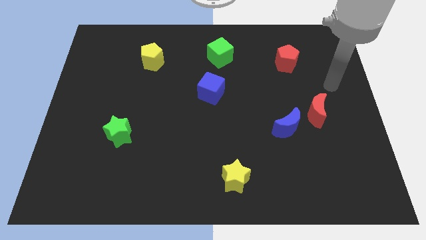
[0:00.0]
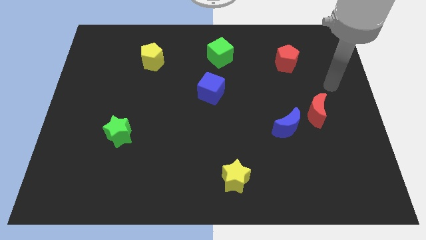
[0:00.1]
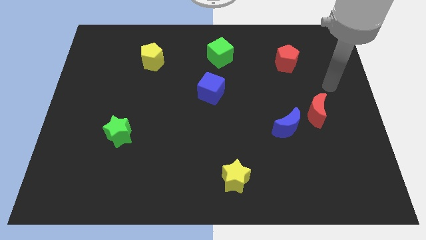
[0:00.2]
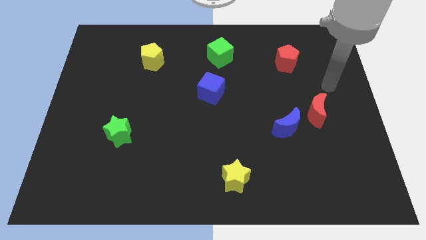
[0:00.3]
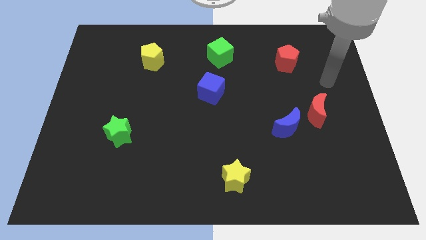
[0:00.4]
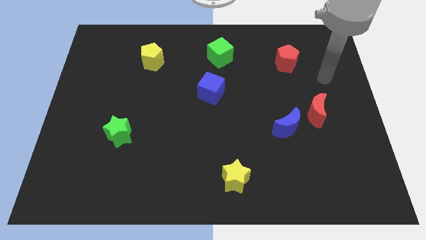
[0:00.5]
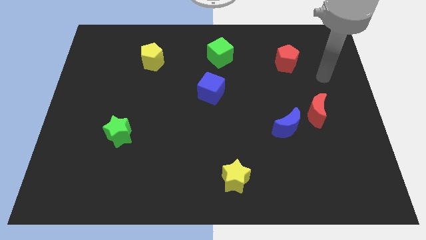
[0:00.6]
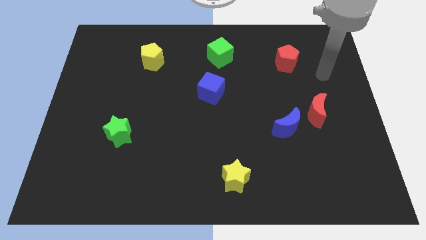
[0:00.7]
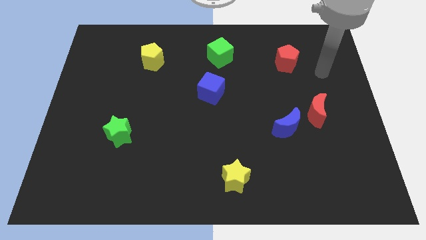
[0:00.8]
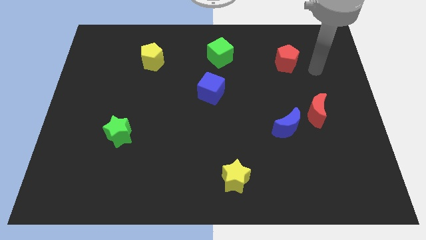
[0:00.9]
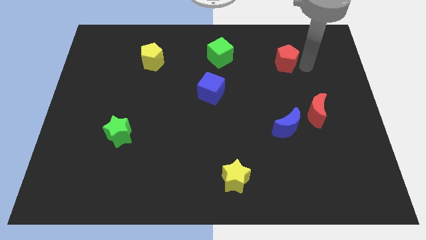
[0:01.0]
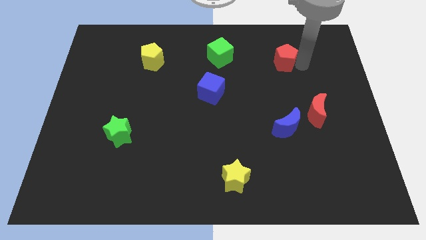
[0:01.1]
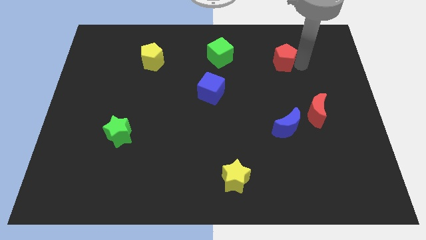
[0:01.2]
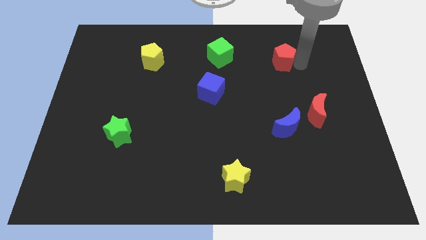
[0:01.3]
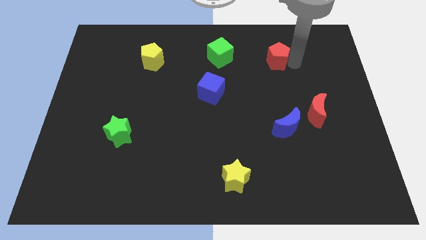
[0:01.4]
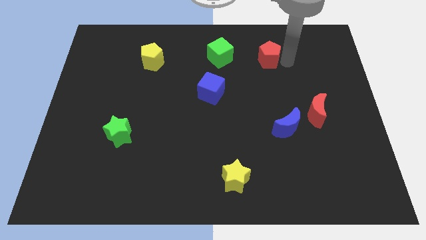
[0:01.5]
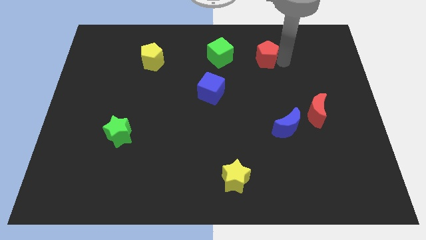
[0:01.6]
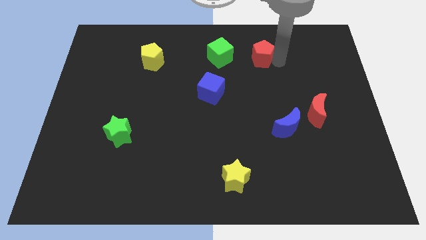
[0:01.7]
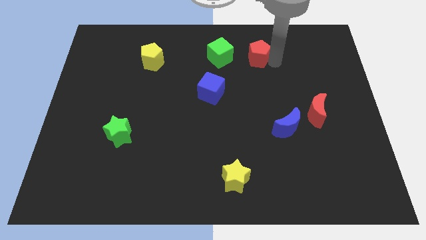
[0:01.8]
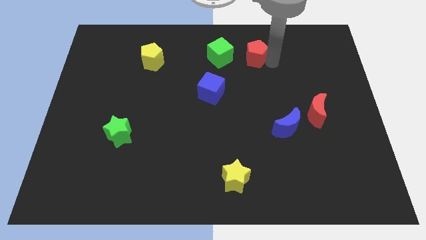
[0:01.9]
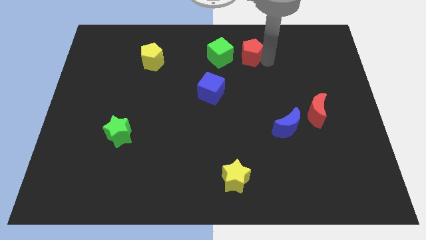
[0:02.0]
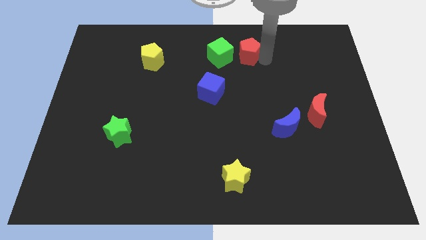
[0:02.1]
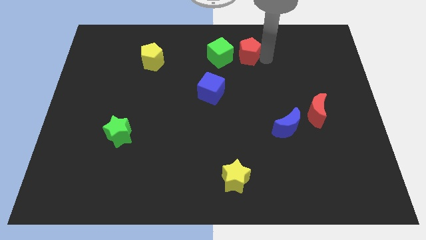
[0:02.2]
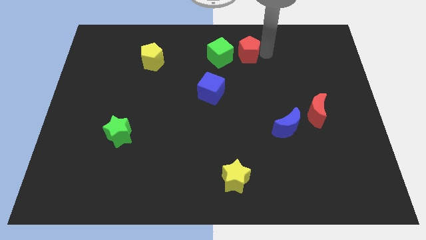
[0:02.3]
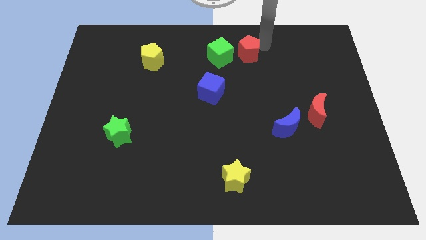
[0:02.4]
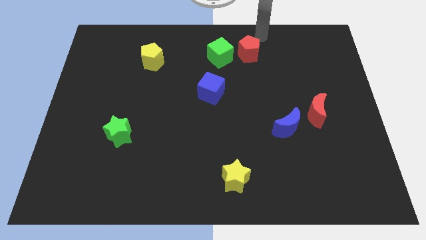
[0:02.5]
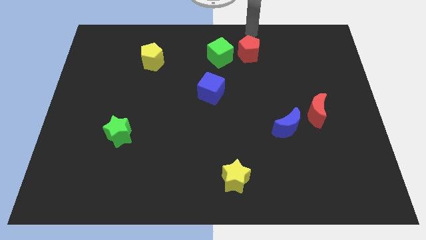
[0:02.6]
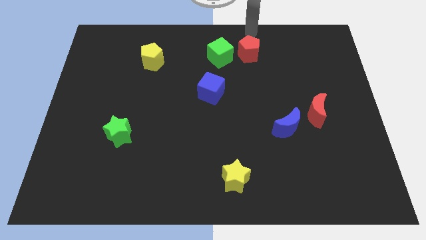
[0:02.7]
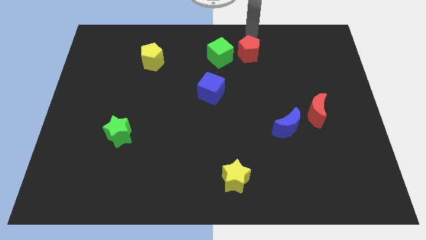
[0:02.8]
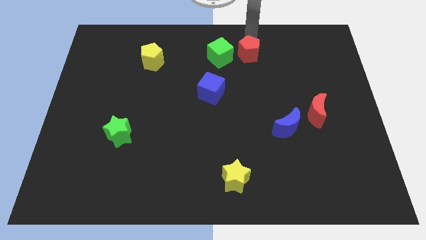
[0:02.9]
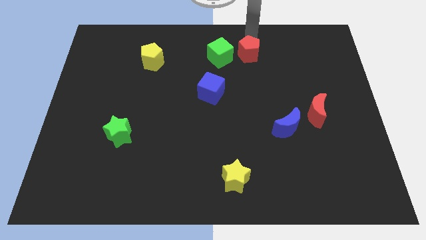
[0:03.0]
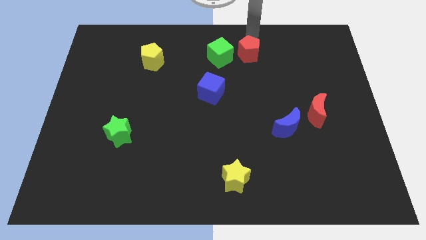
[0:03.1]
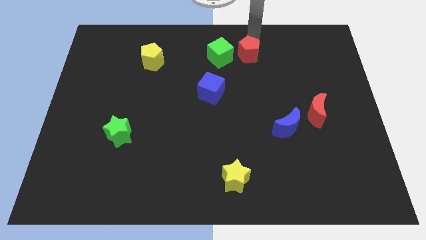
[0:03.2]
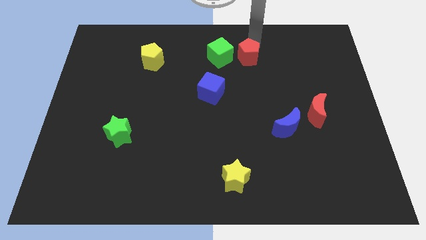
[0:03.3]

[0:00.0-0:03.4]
move the red pentagon to the right side of the green cube

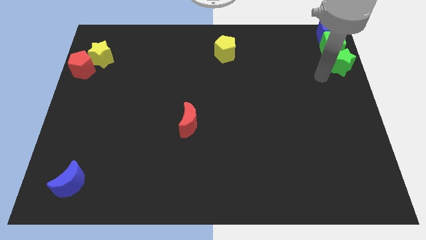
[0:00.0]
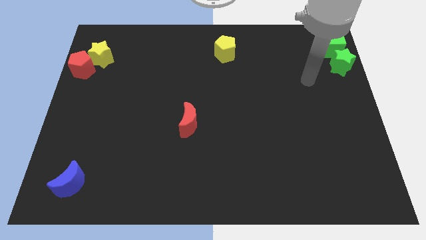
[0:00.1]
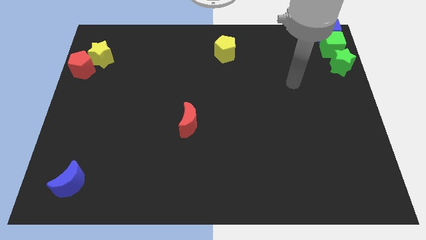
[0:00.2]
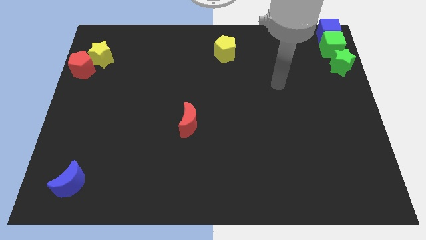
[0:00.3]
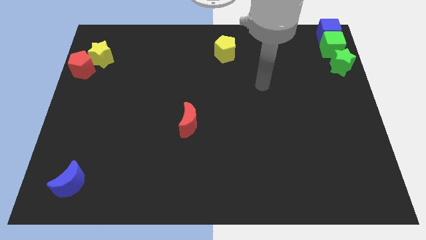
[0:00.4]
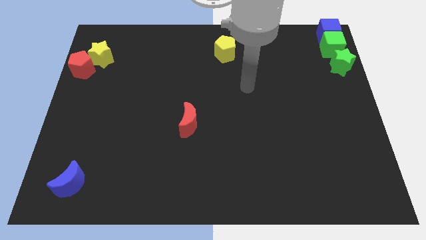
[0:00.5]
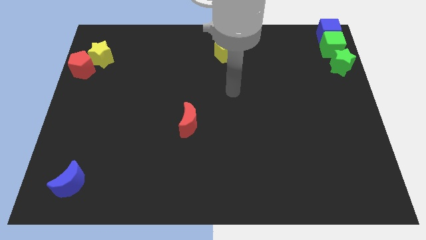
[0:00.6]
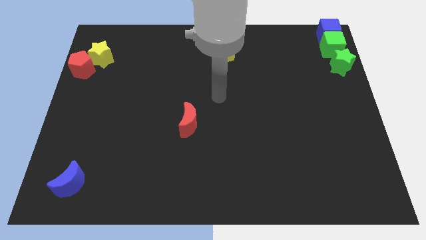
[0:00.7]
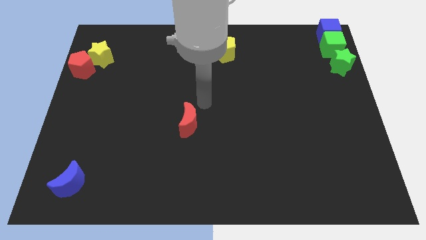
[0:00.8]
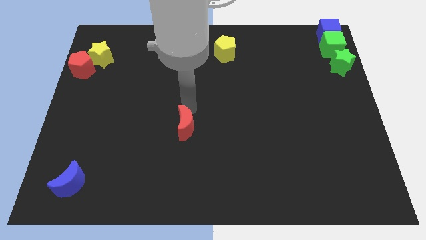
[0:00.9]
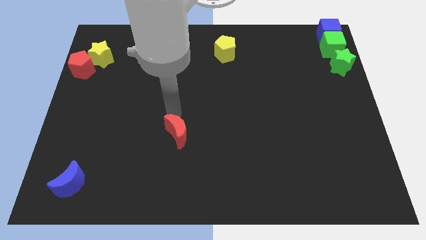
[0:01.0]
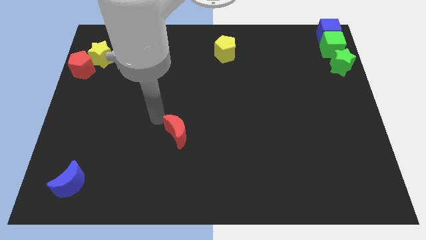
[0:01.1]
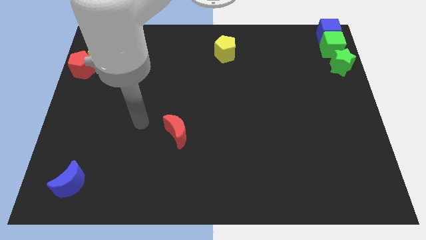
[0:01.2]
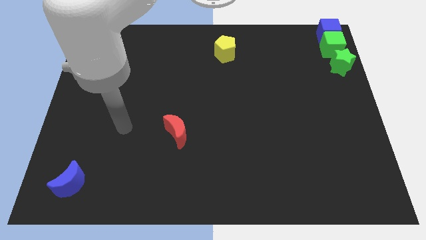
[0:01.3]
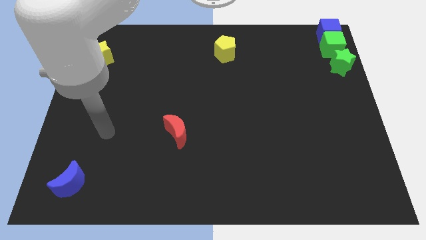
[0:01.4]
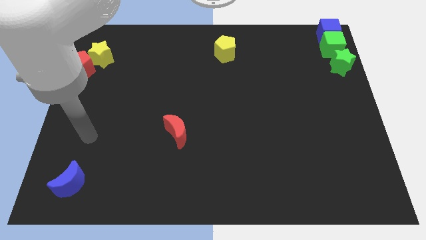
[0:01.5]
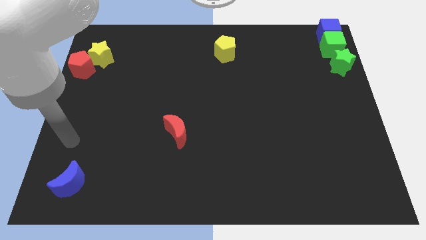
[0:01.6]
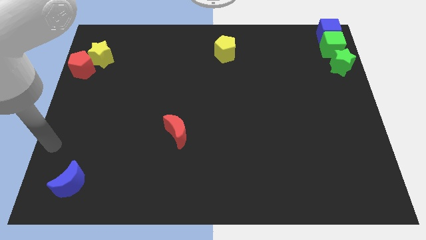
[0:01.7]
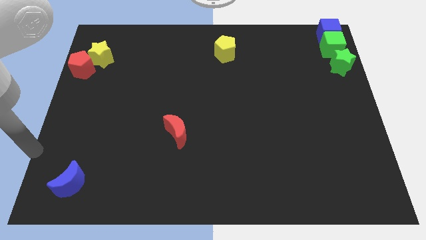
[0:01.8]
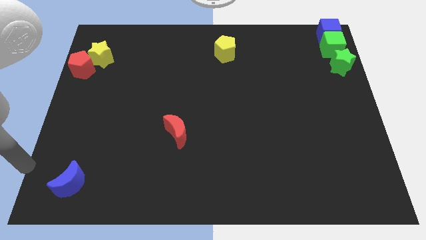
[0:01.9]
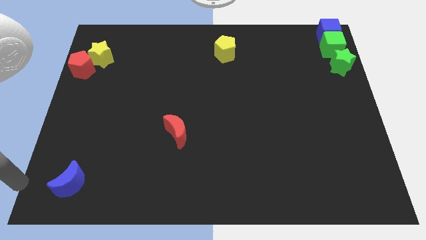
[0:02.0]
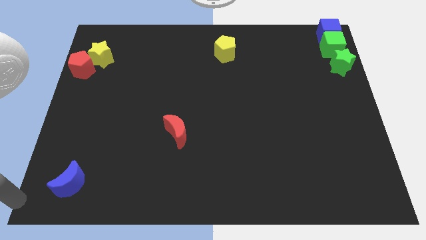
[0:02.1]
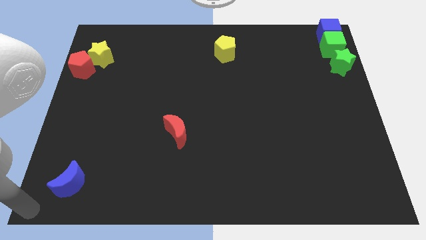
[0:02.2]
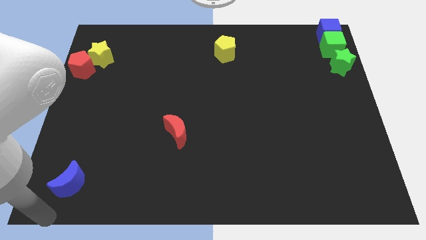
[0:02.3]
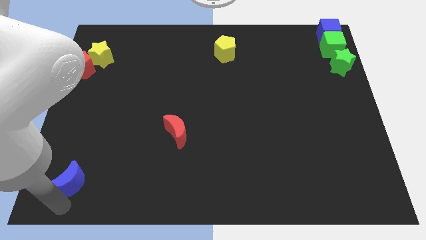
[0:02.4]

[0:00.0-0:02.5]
move your arm towards the blue moon

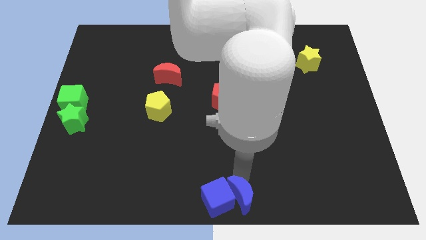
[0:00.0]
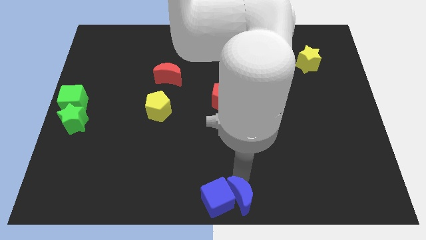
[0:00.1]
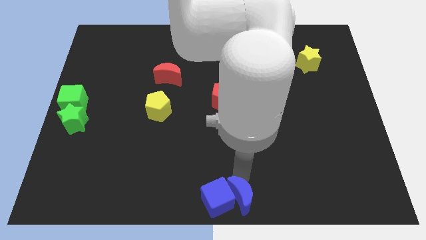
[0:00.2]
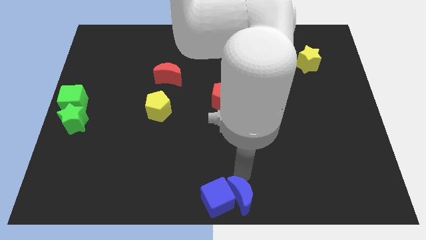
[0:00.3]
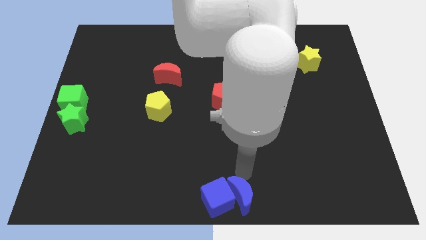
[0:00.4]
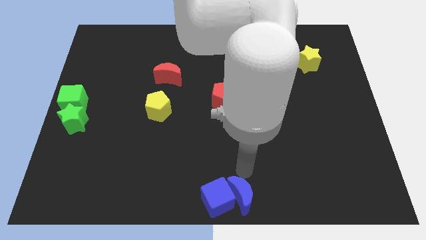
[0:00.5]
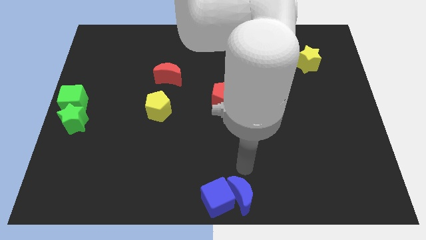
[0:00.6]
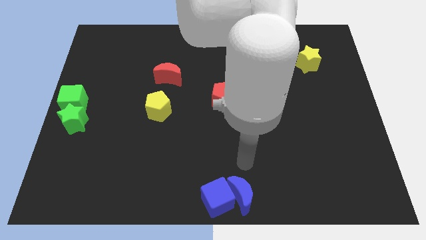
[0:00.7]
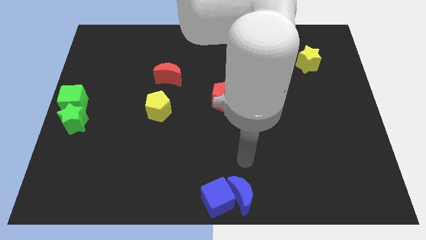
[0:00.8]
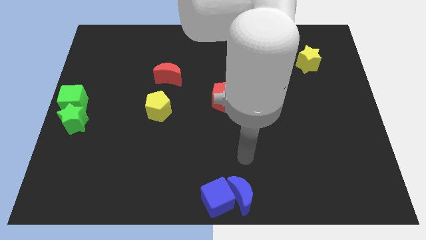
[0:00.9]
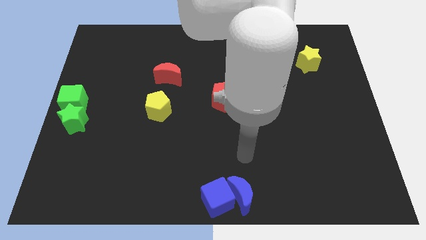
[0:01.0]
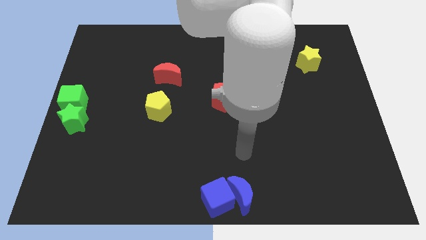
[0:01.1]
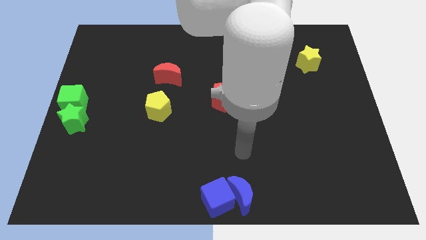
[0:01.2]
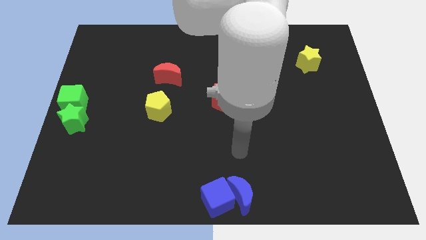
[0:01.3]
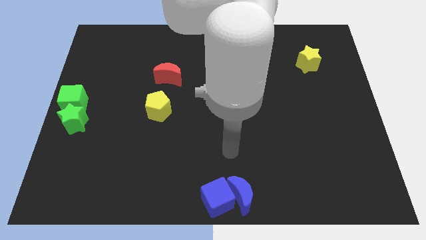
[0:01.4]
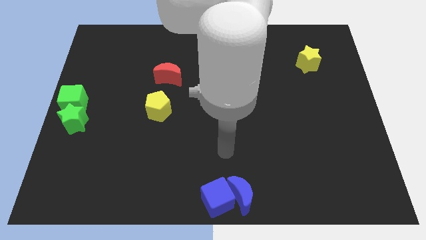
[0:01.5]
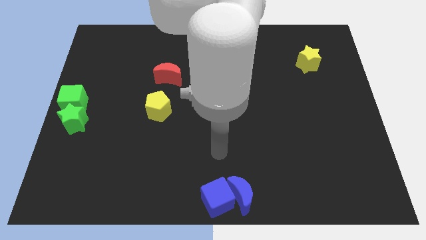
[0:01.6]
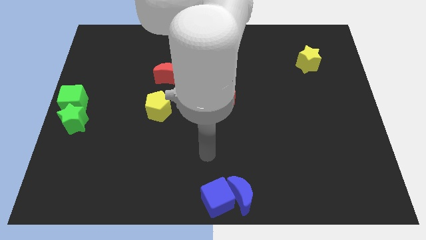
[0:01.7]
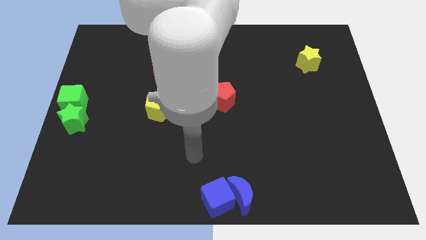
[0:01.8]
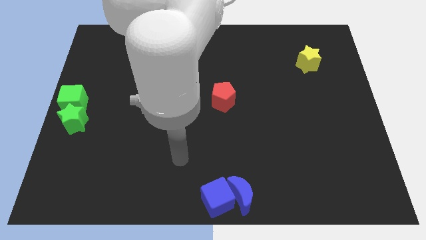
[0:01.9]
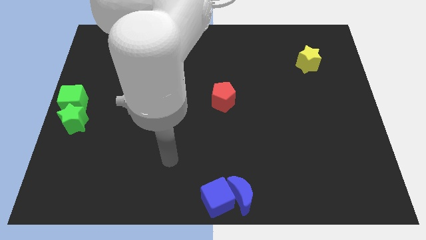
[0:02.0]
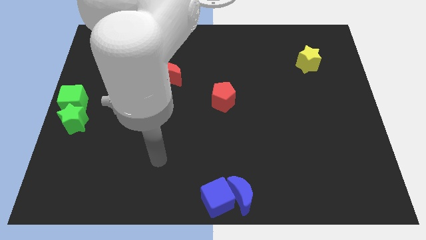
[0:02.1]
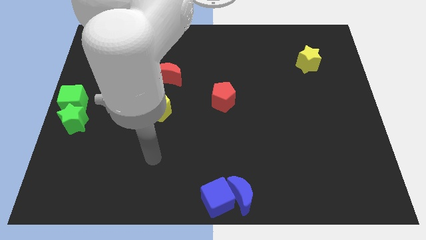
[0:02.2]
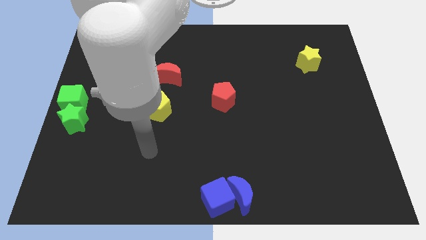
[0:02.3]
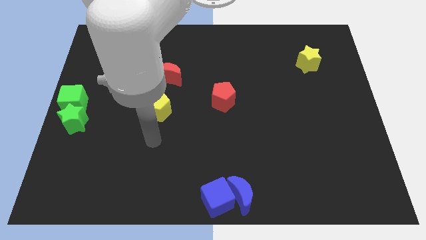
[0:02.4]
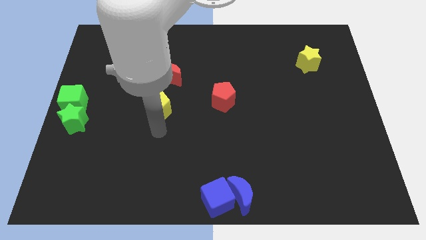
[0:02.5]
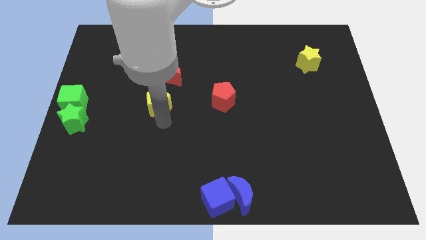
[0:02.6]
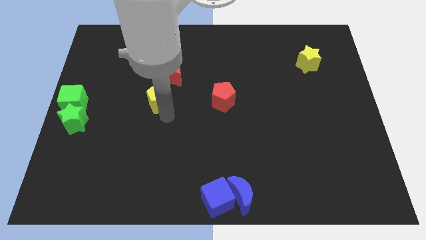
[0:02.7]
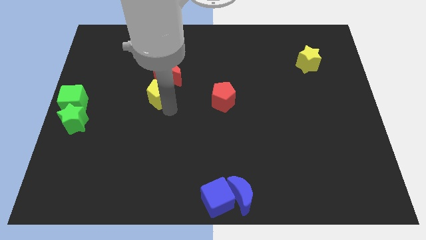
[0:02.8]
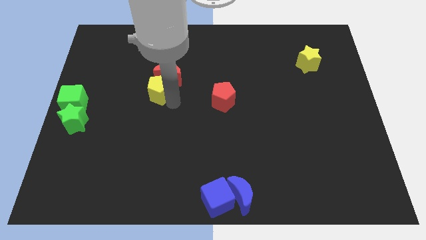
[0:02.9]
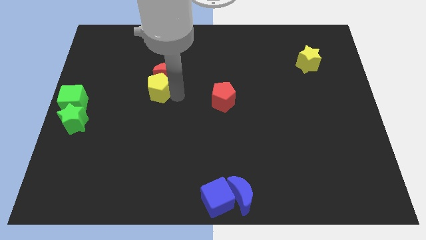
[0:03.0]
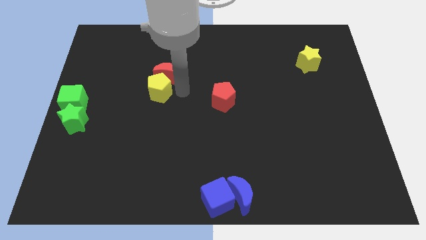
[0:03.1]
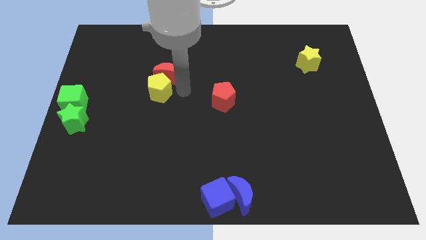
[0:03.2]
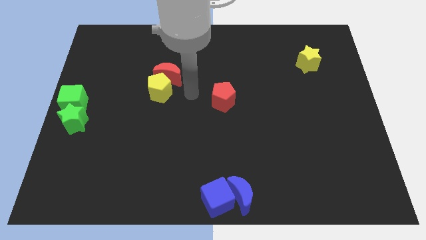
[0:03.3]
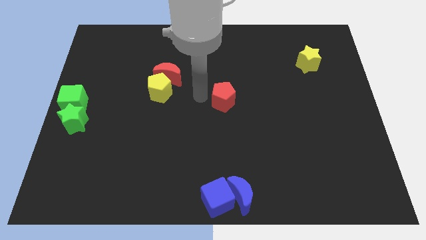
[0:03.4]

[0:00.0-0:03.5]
move your arm away form the blue crescent
